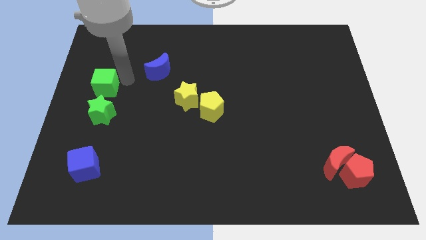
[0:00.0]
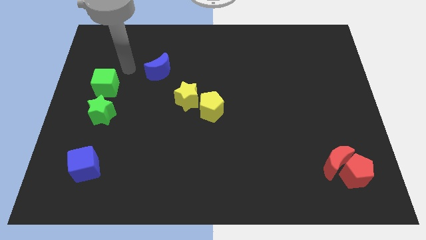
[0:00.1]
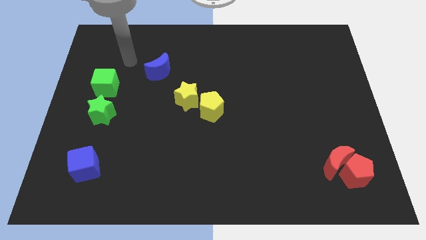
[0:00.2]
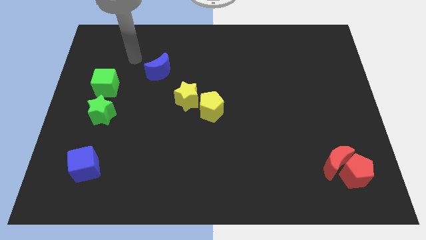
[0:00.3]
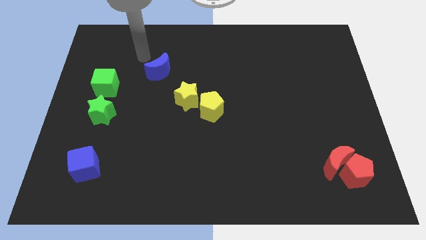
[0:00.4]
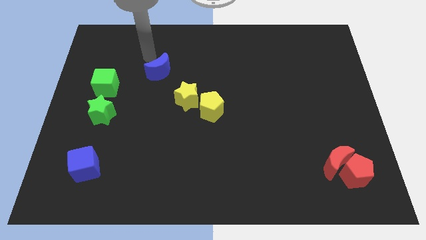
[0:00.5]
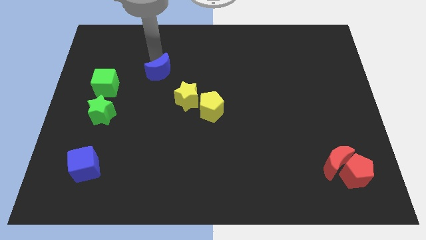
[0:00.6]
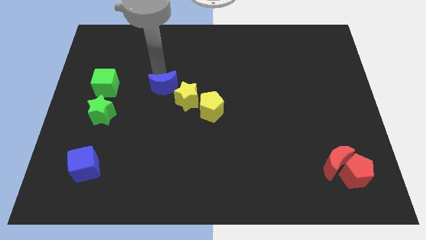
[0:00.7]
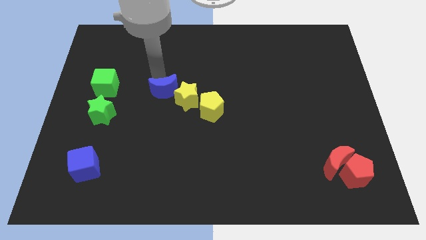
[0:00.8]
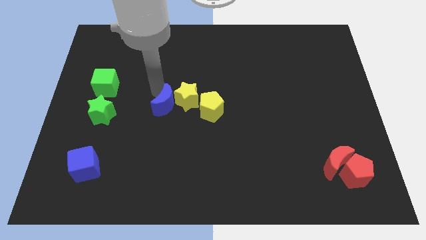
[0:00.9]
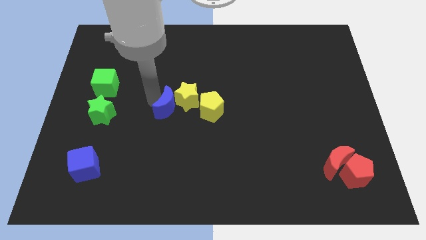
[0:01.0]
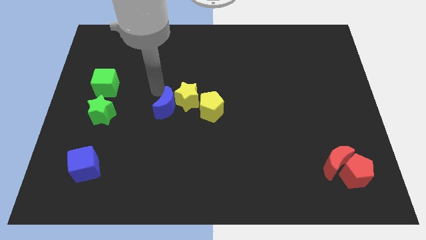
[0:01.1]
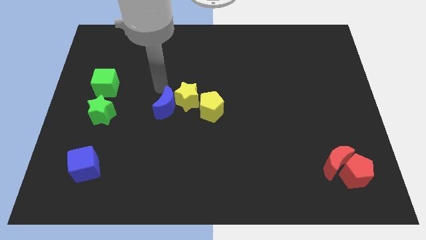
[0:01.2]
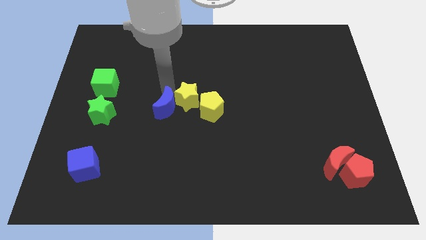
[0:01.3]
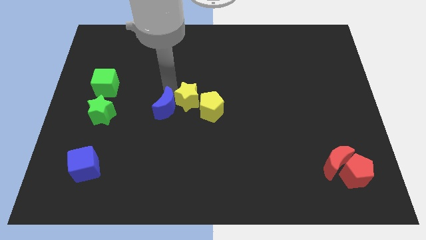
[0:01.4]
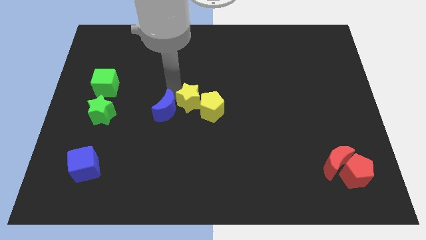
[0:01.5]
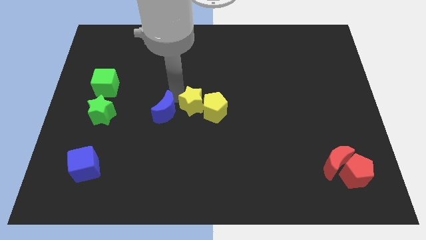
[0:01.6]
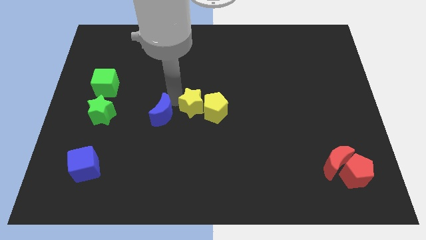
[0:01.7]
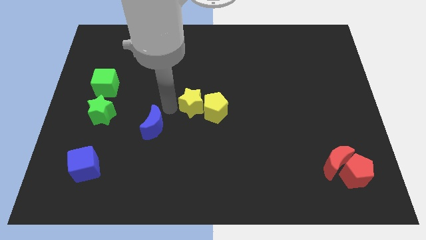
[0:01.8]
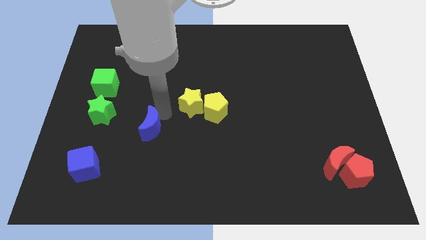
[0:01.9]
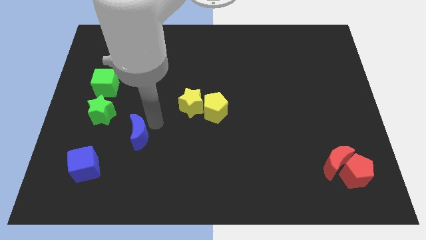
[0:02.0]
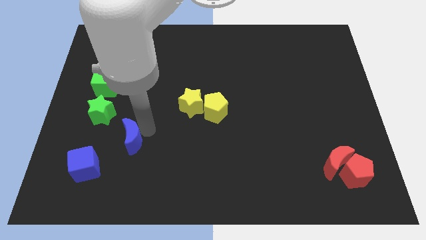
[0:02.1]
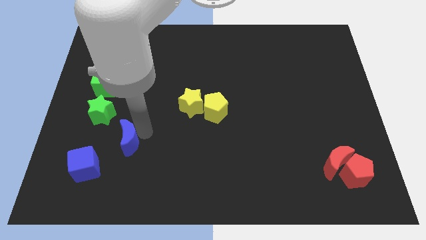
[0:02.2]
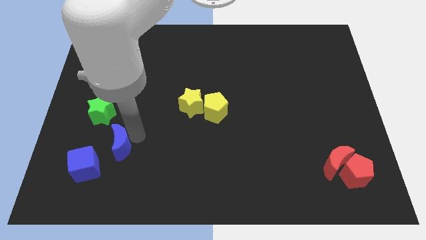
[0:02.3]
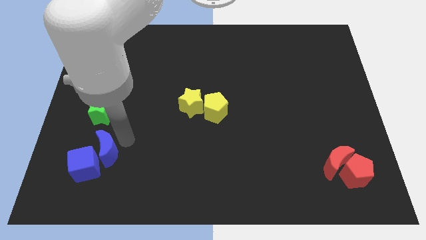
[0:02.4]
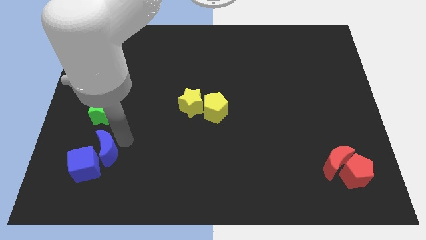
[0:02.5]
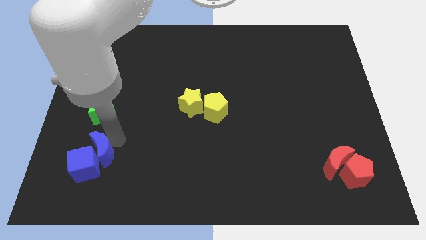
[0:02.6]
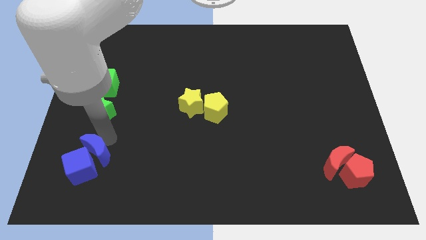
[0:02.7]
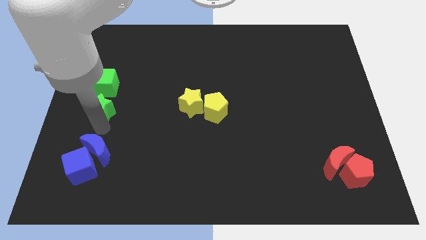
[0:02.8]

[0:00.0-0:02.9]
move the blue crescent to the top of the blue cube

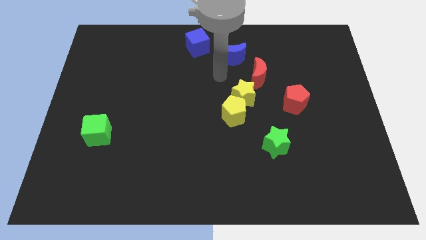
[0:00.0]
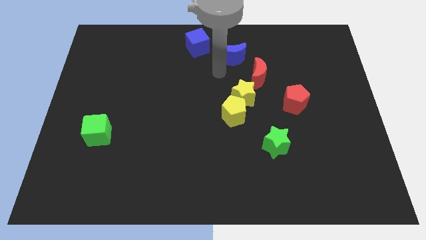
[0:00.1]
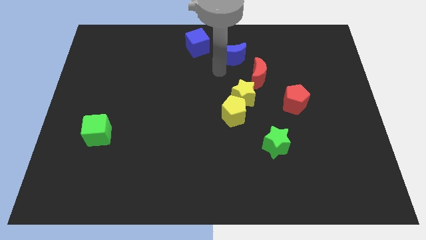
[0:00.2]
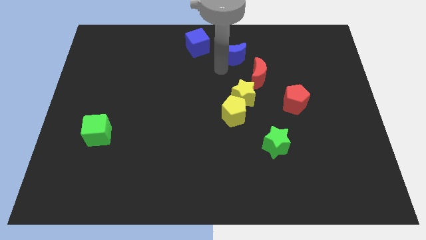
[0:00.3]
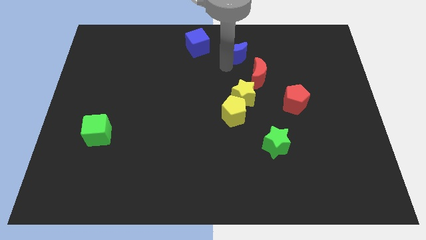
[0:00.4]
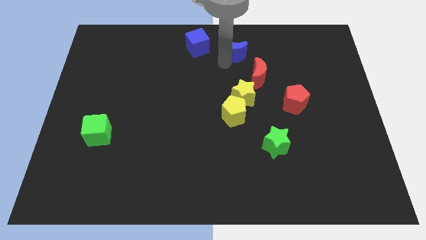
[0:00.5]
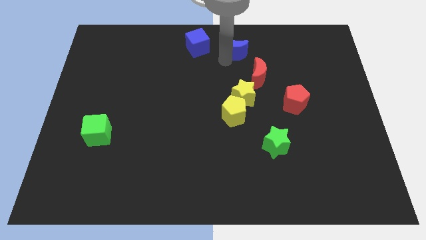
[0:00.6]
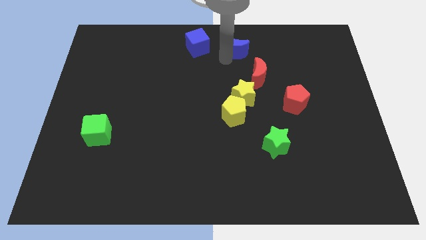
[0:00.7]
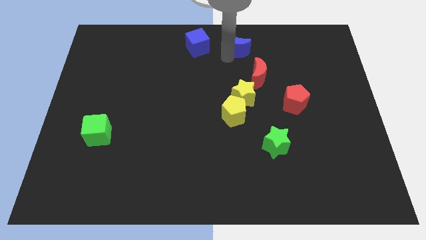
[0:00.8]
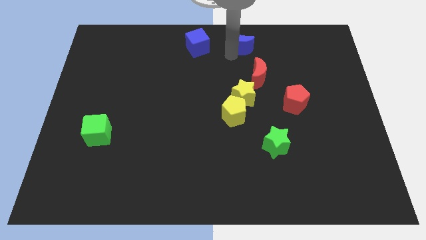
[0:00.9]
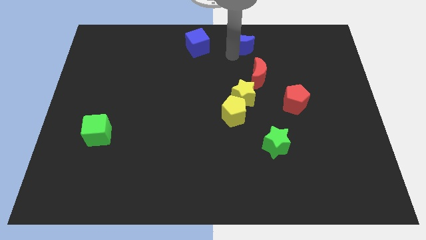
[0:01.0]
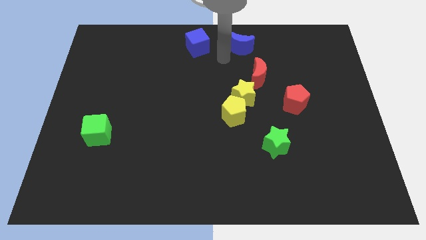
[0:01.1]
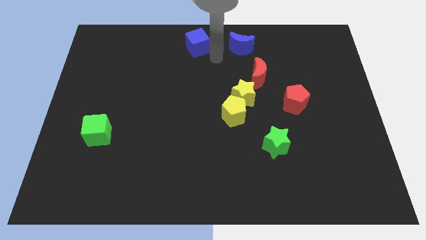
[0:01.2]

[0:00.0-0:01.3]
push the blue crescent to the right of the blue cube

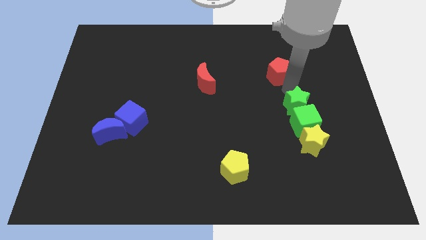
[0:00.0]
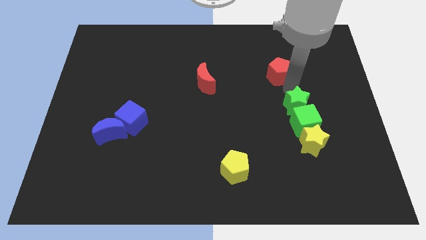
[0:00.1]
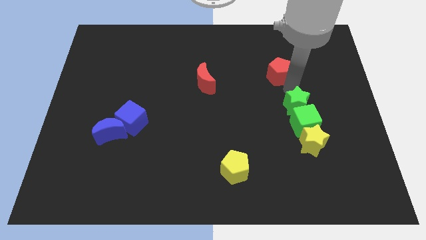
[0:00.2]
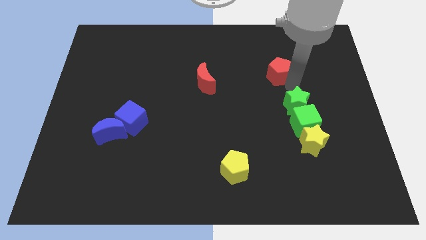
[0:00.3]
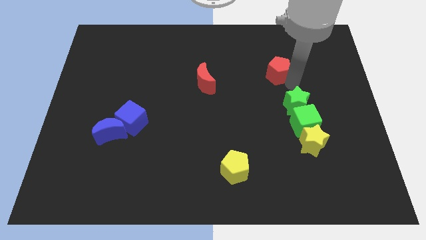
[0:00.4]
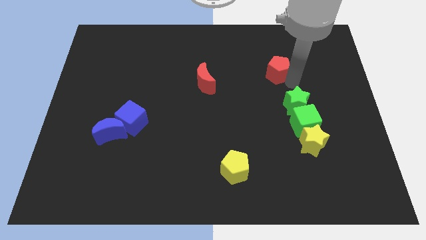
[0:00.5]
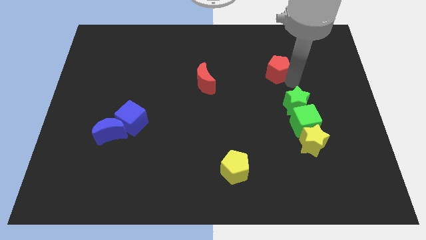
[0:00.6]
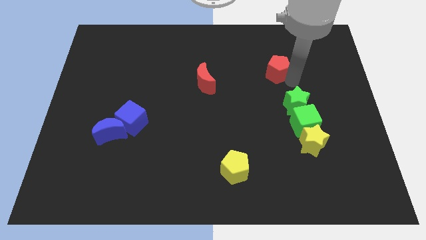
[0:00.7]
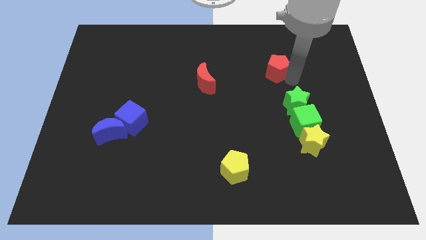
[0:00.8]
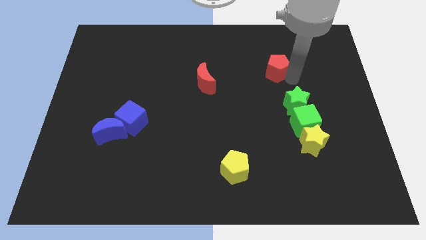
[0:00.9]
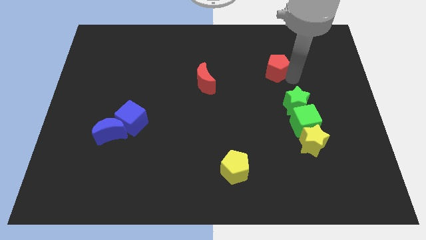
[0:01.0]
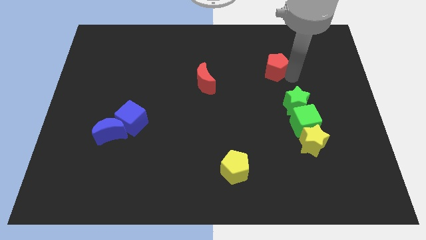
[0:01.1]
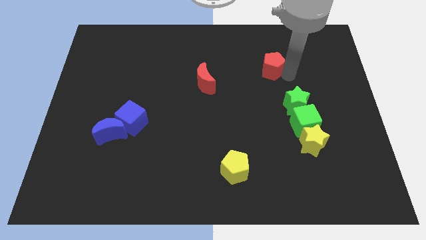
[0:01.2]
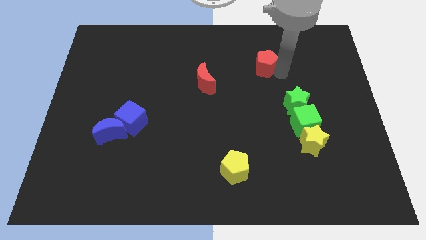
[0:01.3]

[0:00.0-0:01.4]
slightly push the red pentagon upwards

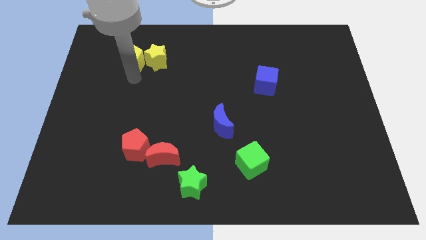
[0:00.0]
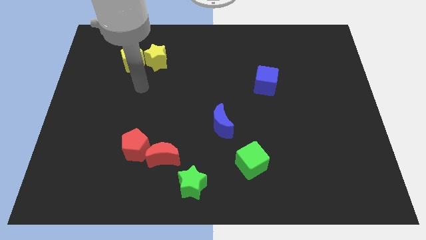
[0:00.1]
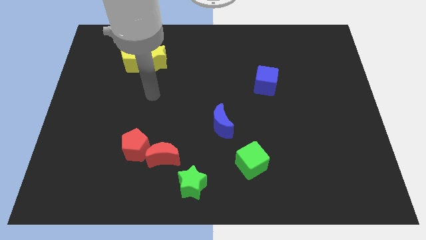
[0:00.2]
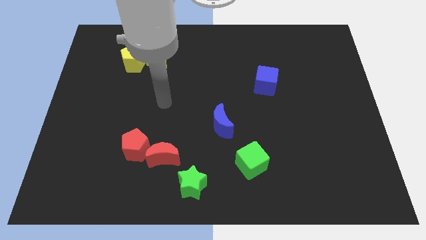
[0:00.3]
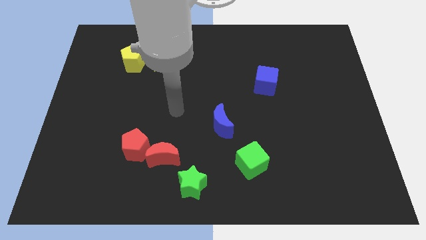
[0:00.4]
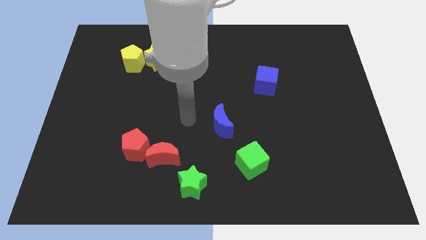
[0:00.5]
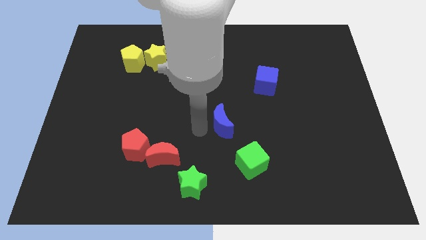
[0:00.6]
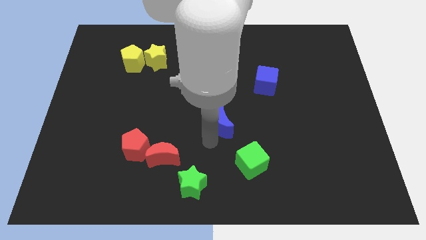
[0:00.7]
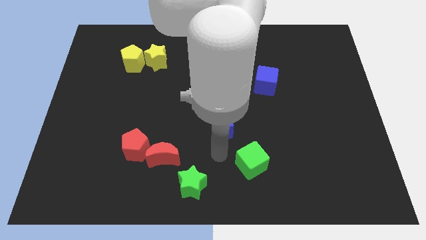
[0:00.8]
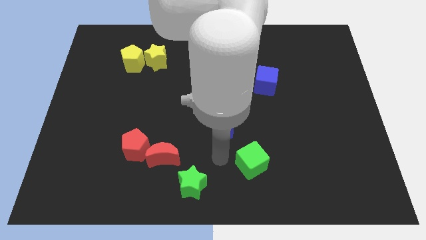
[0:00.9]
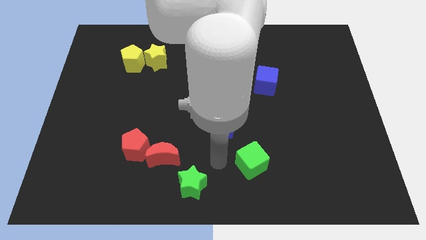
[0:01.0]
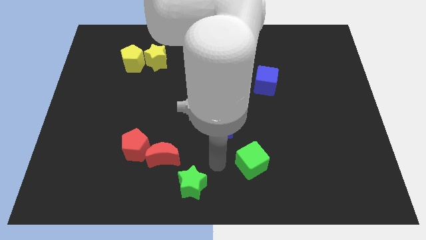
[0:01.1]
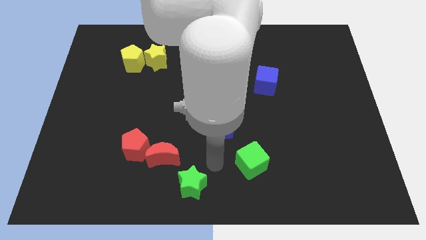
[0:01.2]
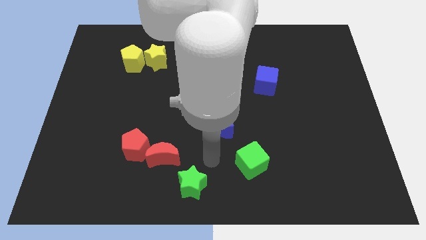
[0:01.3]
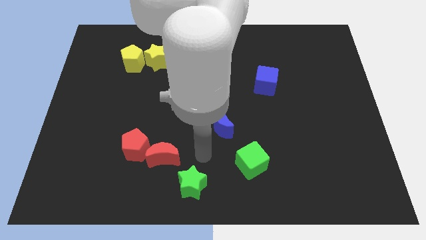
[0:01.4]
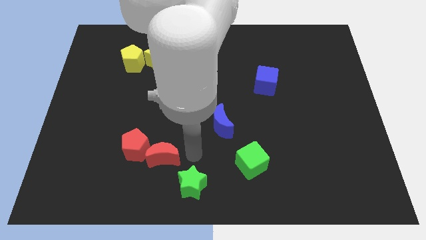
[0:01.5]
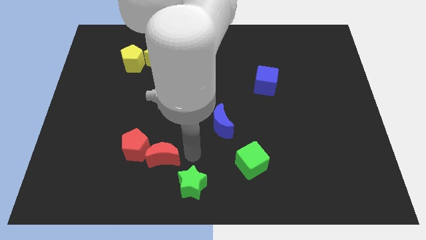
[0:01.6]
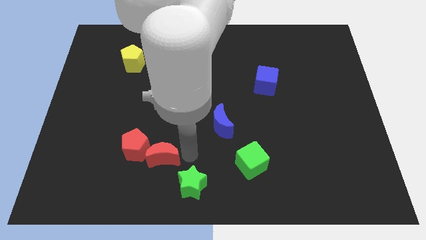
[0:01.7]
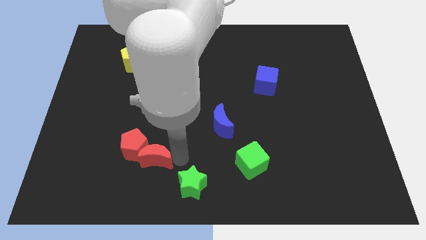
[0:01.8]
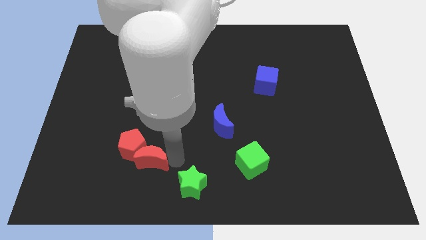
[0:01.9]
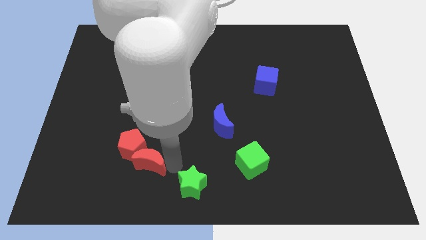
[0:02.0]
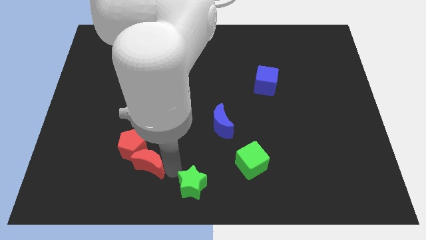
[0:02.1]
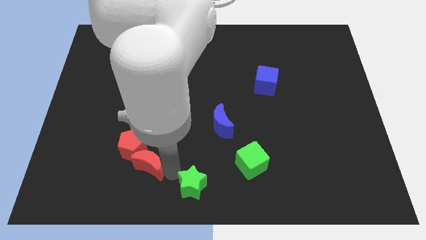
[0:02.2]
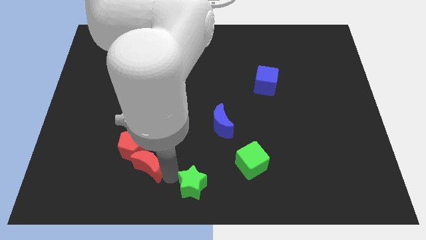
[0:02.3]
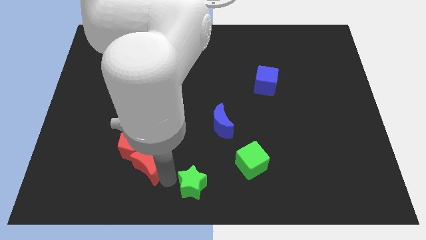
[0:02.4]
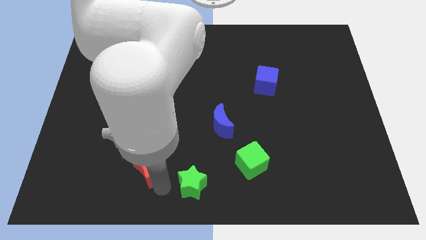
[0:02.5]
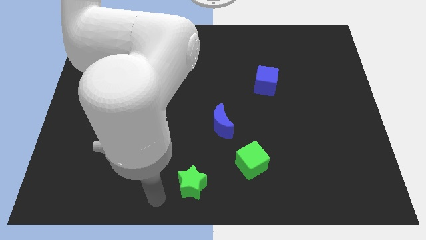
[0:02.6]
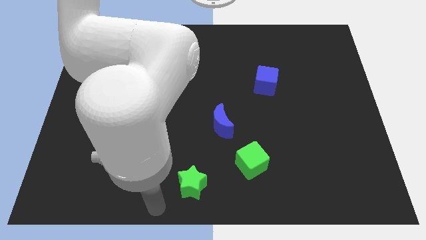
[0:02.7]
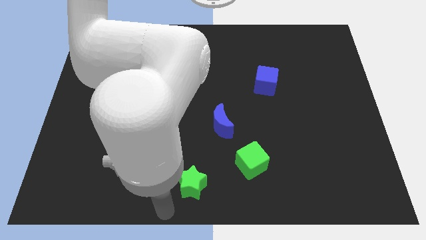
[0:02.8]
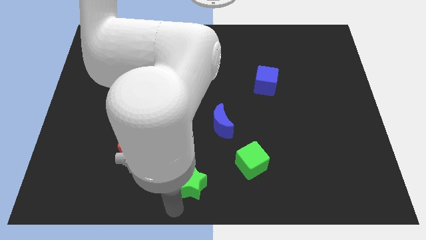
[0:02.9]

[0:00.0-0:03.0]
move the red moon below right to the red pentagon

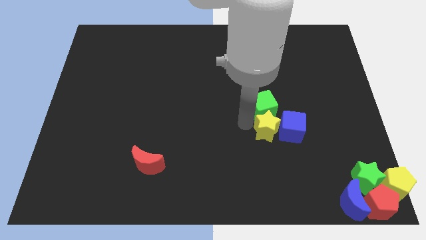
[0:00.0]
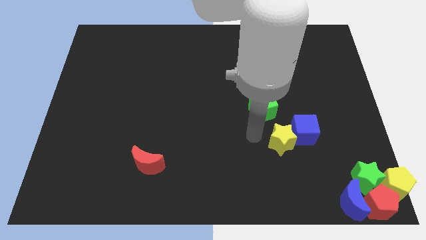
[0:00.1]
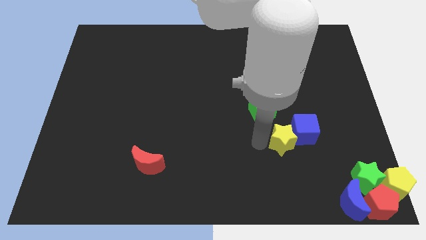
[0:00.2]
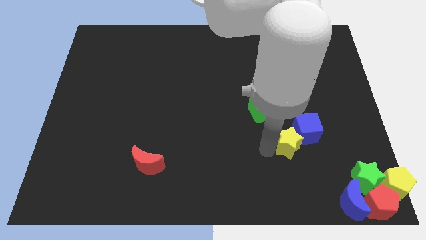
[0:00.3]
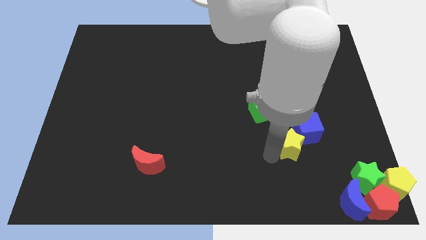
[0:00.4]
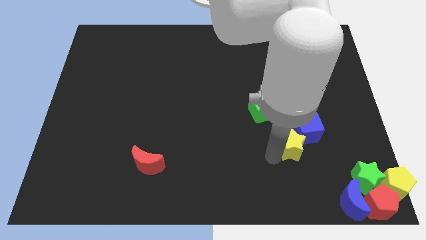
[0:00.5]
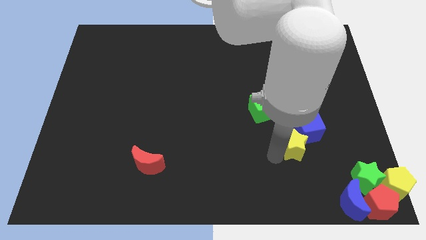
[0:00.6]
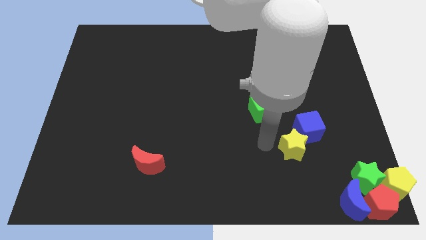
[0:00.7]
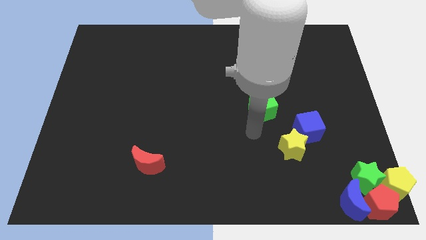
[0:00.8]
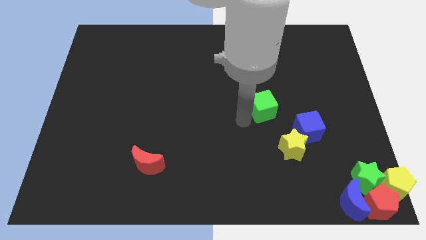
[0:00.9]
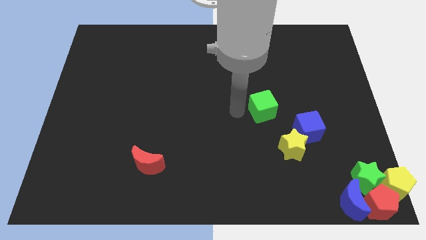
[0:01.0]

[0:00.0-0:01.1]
separate yellow star from the green cube
